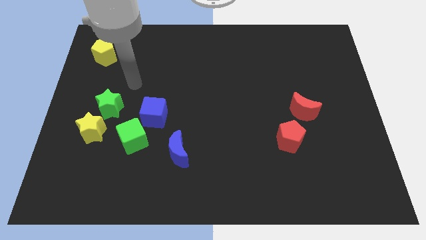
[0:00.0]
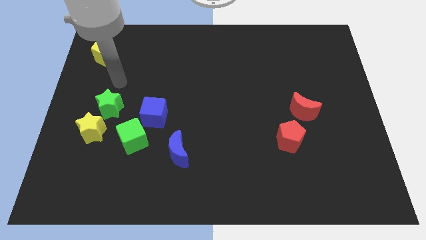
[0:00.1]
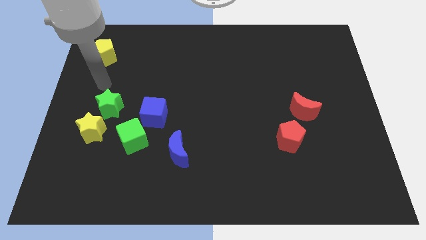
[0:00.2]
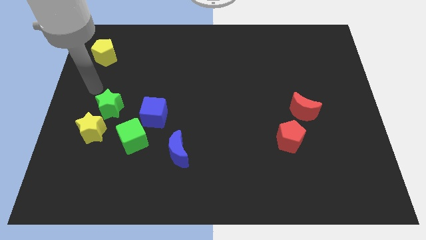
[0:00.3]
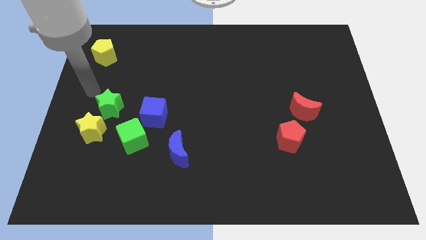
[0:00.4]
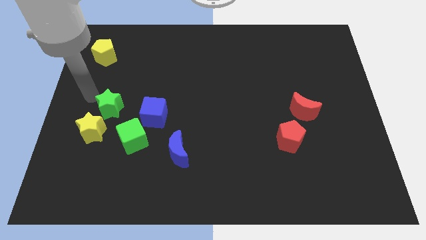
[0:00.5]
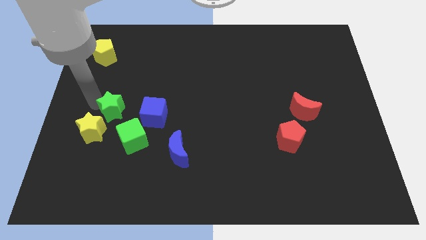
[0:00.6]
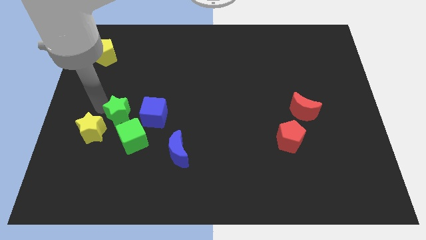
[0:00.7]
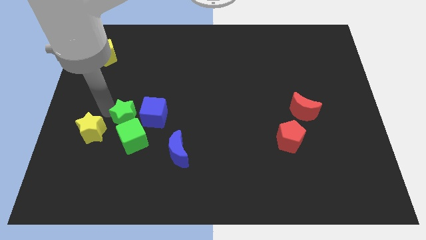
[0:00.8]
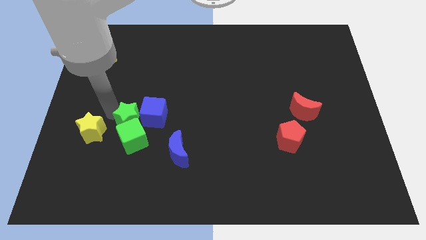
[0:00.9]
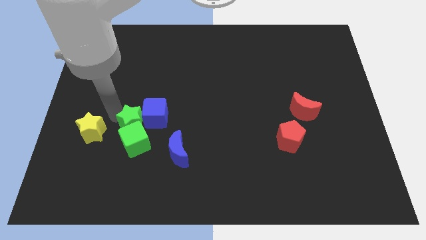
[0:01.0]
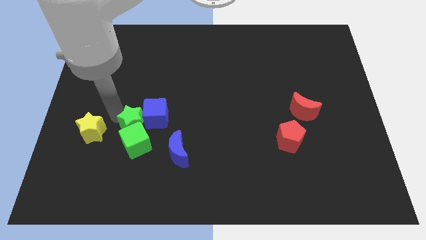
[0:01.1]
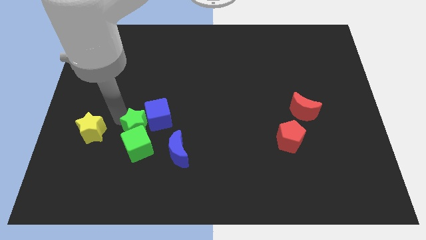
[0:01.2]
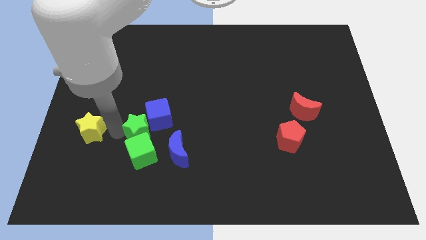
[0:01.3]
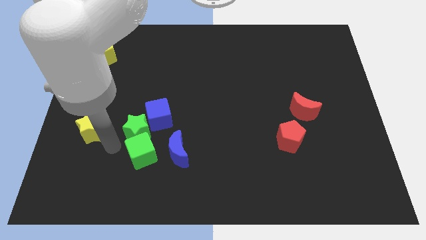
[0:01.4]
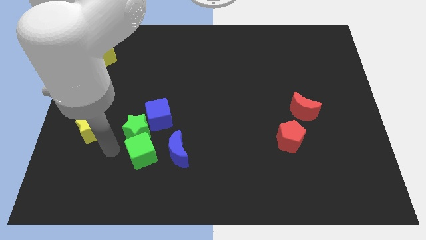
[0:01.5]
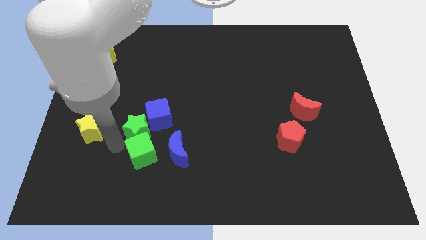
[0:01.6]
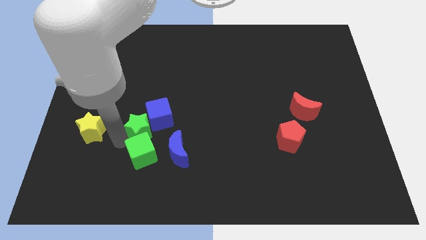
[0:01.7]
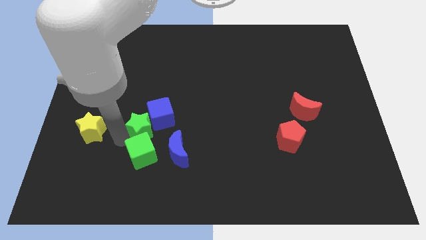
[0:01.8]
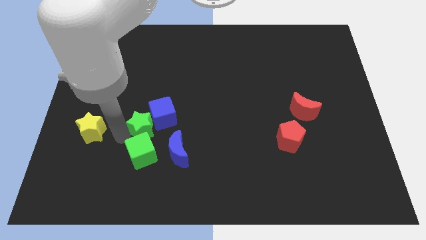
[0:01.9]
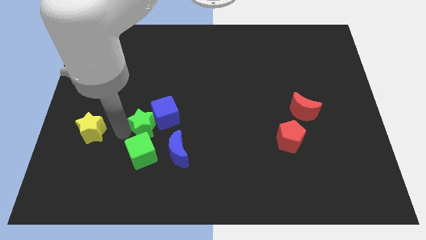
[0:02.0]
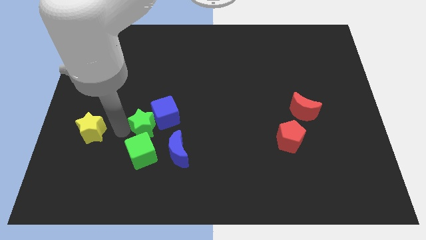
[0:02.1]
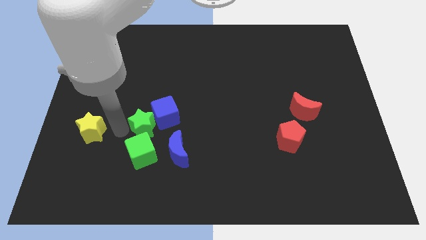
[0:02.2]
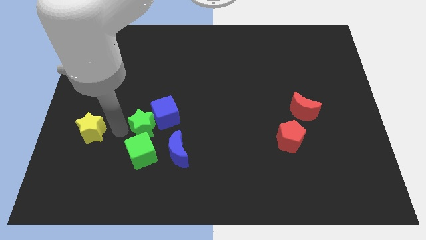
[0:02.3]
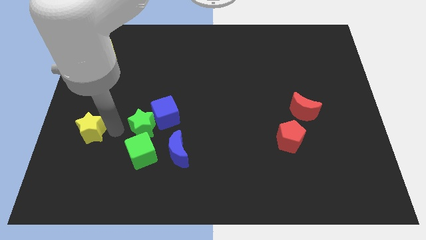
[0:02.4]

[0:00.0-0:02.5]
push the green star into green cube

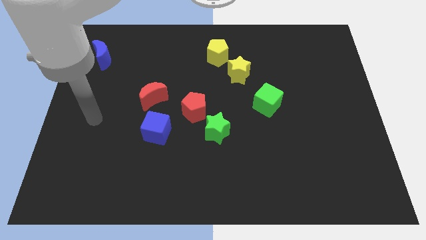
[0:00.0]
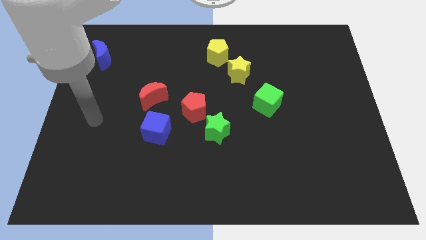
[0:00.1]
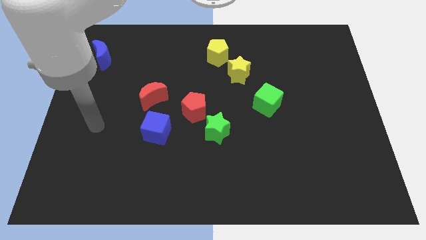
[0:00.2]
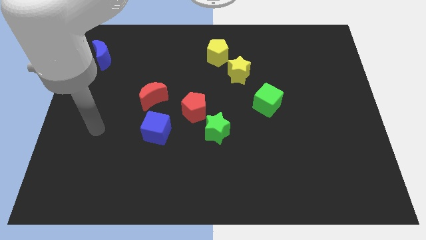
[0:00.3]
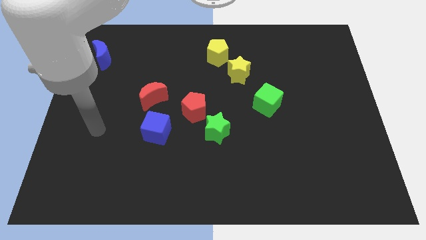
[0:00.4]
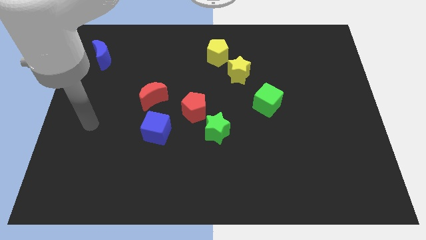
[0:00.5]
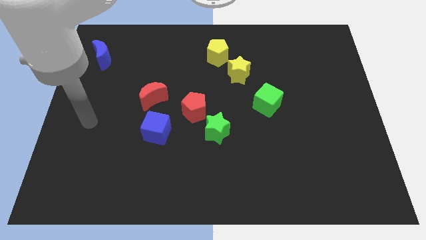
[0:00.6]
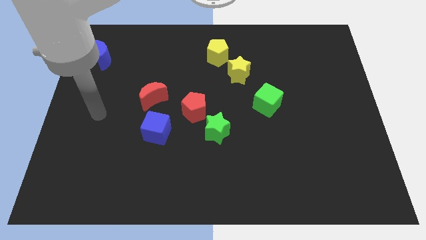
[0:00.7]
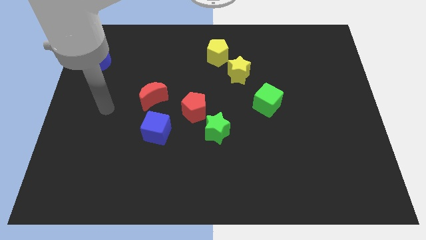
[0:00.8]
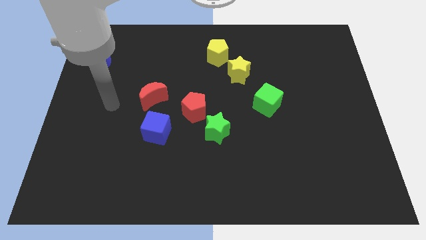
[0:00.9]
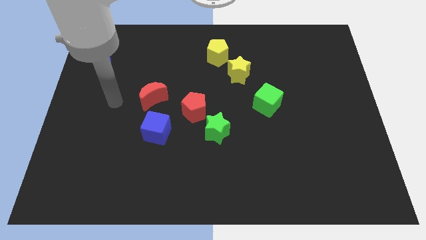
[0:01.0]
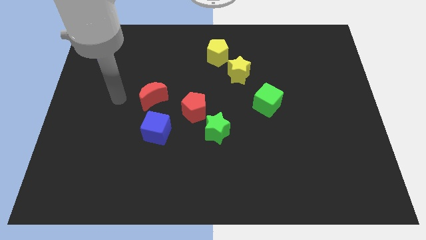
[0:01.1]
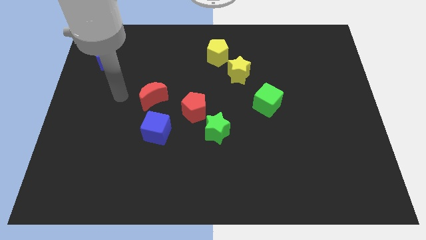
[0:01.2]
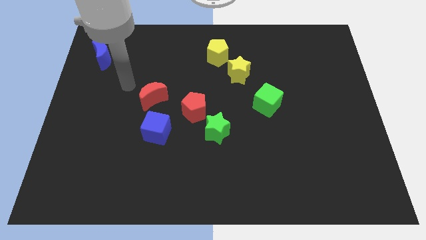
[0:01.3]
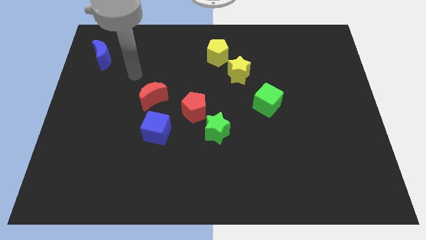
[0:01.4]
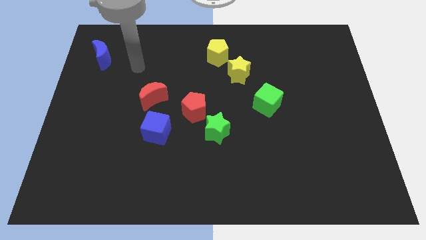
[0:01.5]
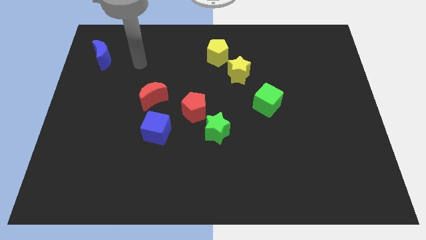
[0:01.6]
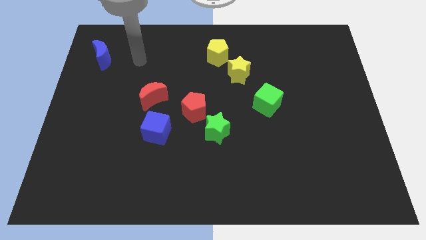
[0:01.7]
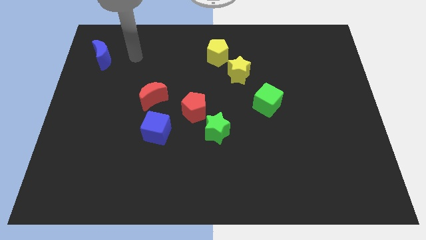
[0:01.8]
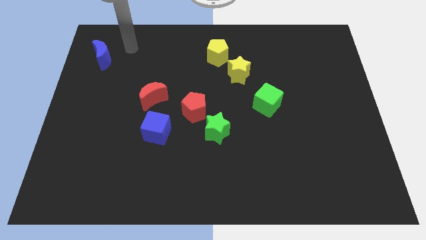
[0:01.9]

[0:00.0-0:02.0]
place your arm to the right side of blue crescent

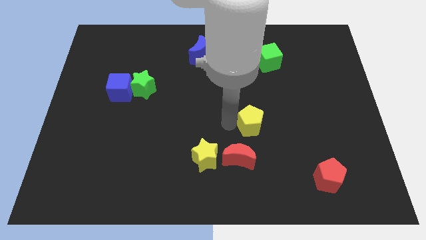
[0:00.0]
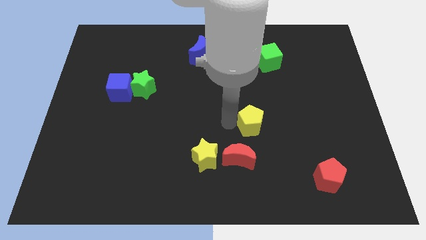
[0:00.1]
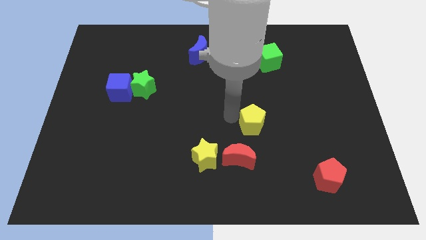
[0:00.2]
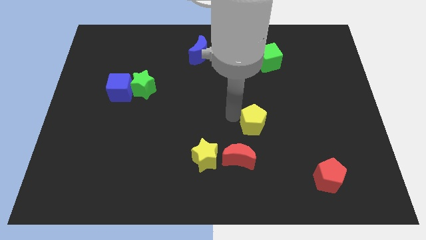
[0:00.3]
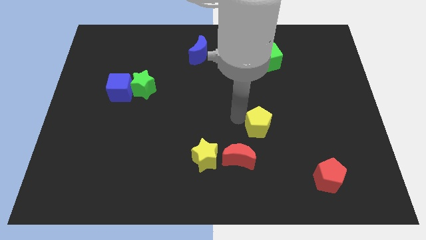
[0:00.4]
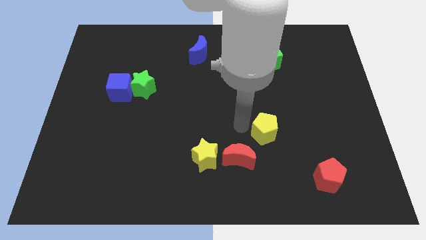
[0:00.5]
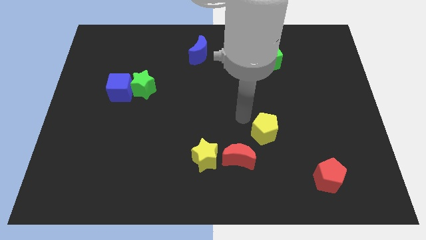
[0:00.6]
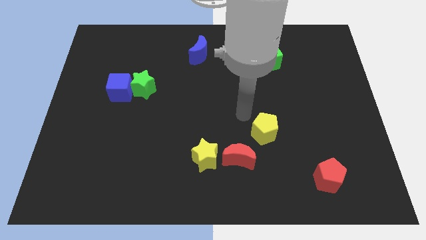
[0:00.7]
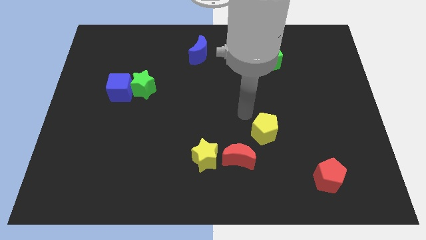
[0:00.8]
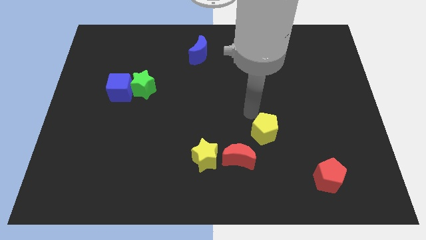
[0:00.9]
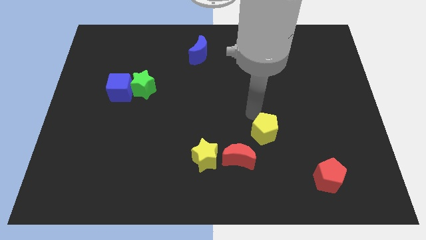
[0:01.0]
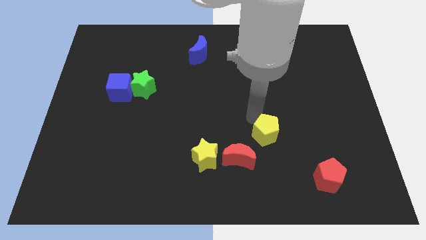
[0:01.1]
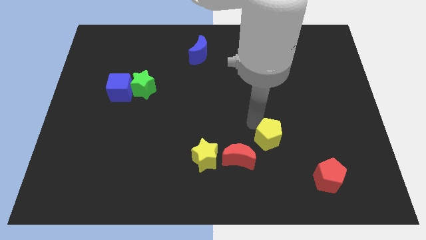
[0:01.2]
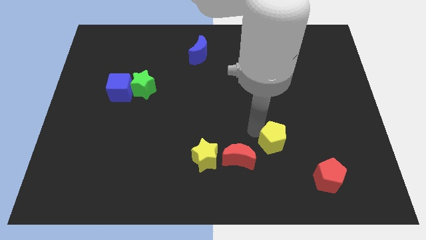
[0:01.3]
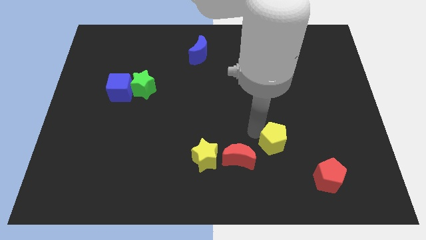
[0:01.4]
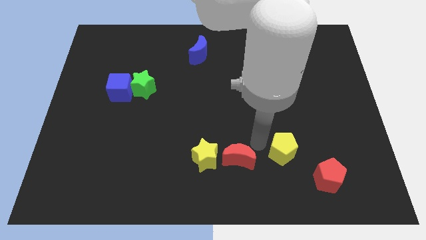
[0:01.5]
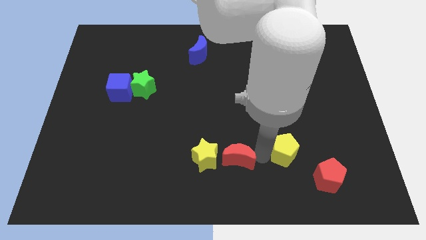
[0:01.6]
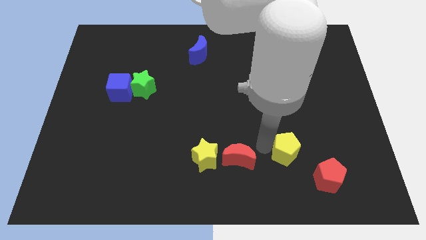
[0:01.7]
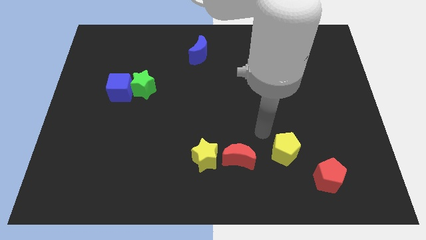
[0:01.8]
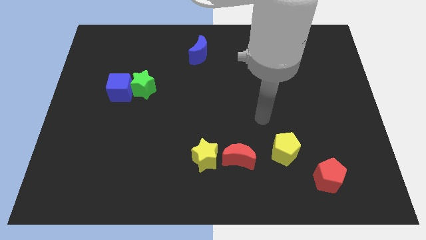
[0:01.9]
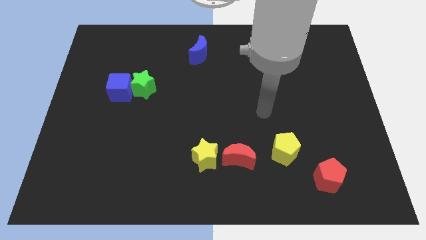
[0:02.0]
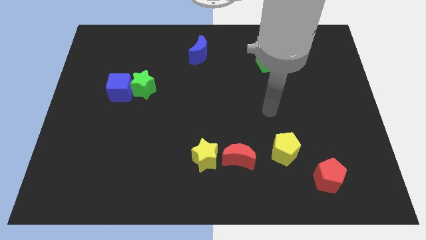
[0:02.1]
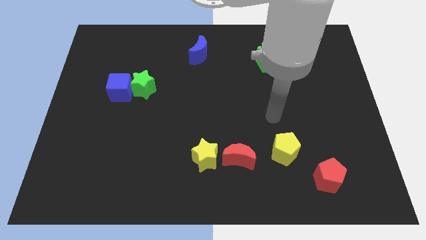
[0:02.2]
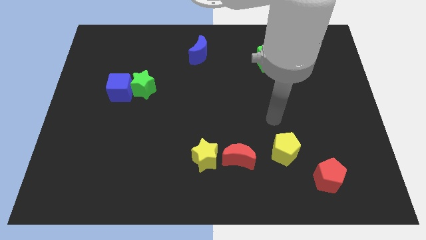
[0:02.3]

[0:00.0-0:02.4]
place the yellow pentagon parallel to the red moon

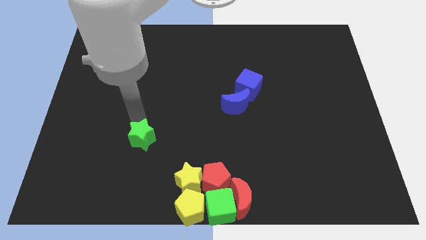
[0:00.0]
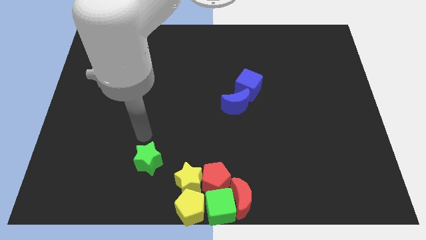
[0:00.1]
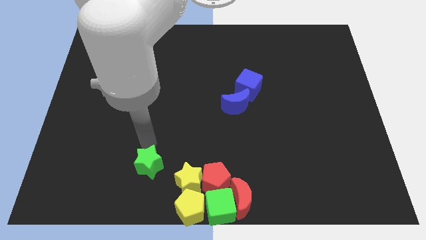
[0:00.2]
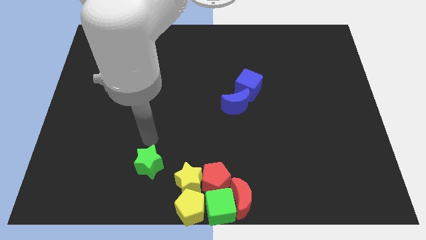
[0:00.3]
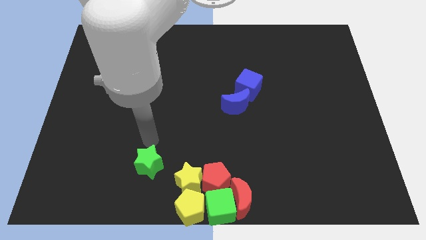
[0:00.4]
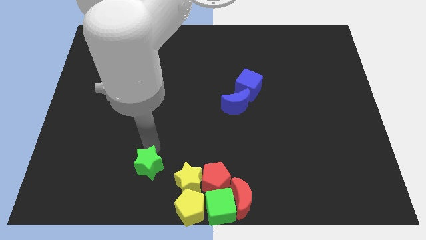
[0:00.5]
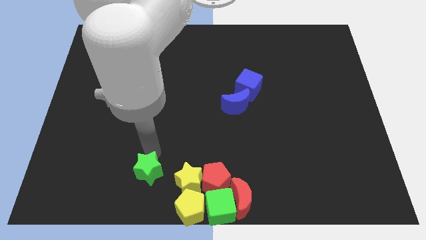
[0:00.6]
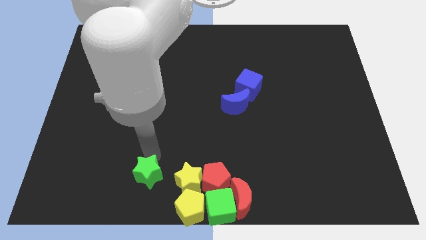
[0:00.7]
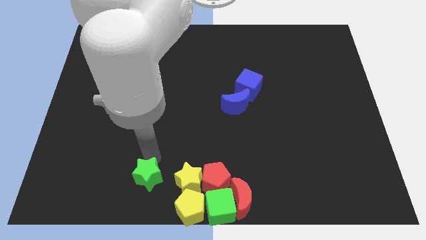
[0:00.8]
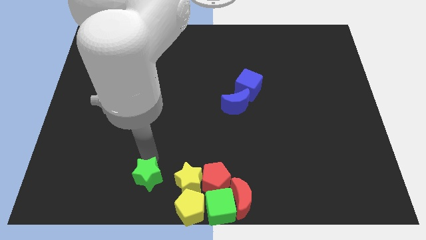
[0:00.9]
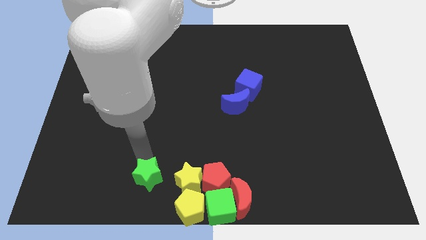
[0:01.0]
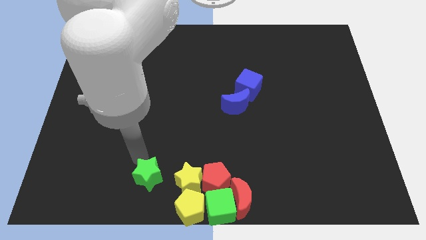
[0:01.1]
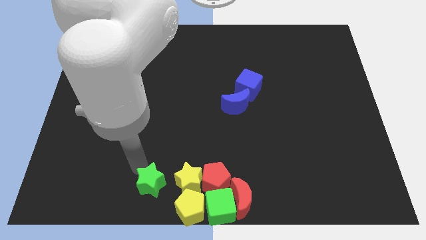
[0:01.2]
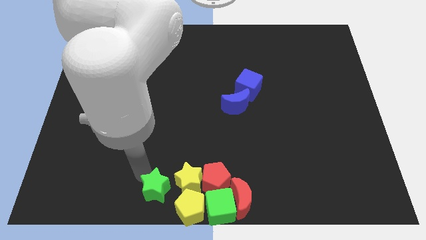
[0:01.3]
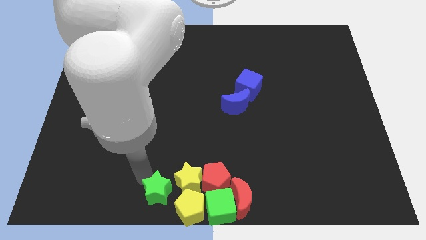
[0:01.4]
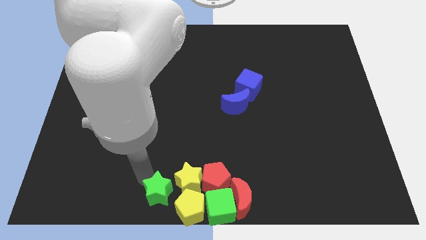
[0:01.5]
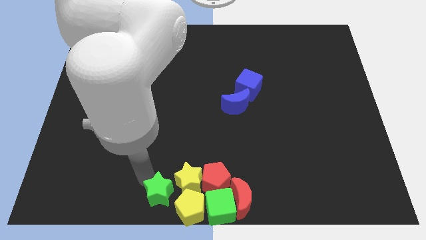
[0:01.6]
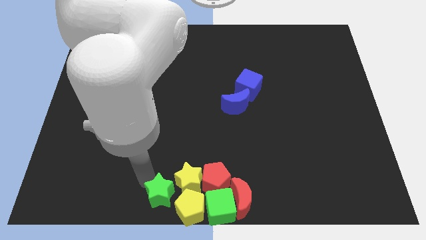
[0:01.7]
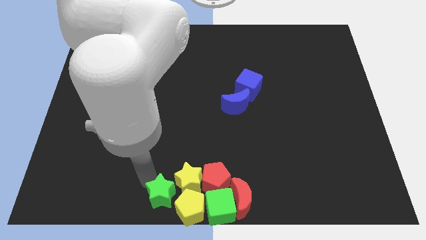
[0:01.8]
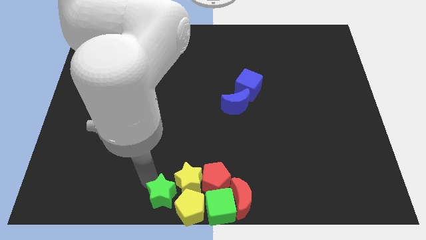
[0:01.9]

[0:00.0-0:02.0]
move the green star to the bottom center
